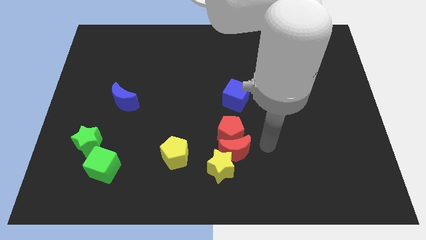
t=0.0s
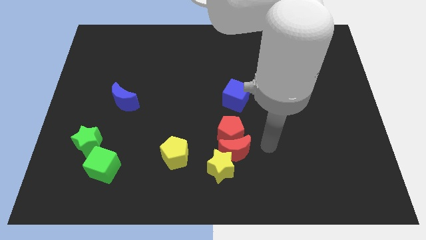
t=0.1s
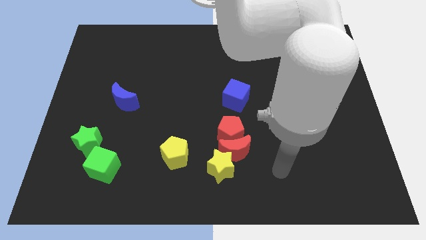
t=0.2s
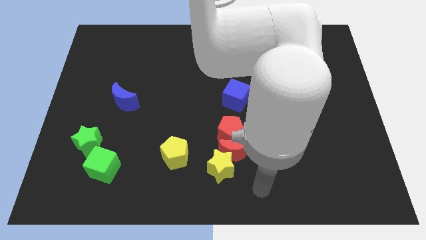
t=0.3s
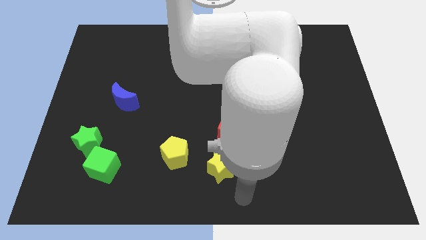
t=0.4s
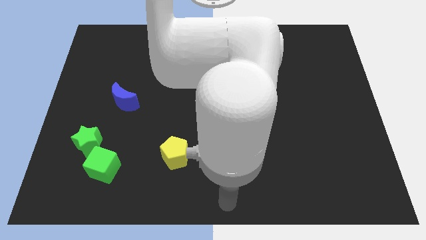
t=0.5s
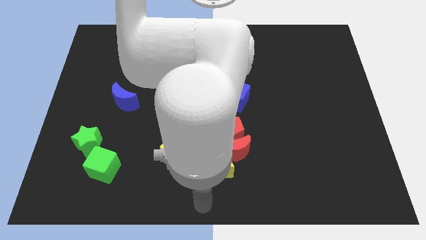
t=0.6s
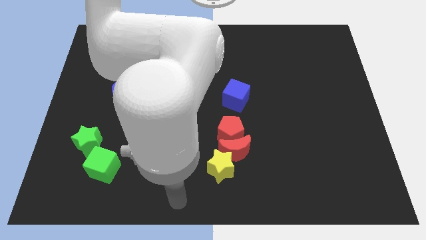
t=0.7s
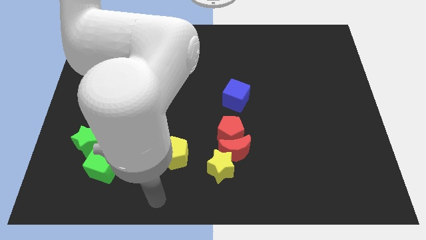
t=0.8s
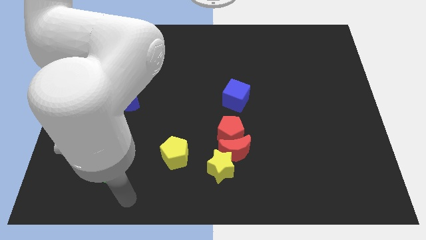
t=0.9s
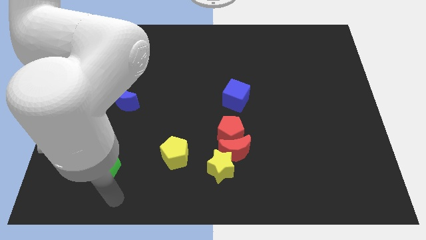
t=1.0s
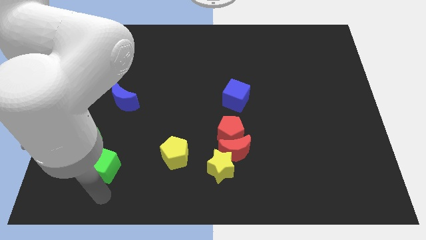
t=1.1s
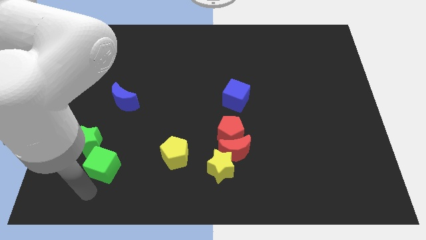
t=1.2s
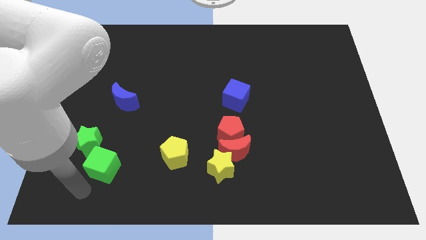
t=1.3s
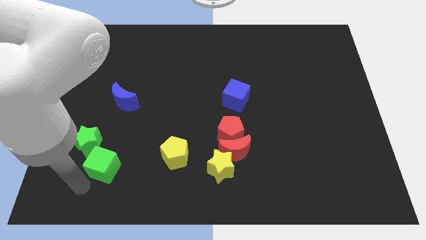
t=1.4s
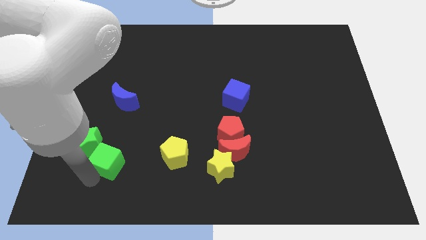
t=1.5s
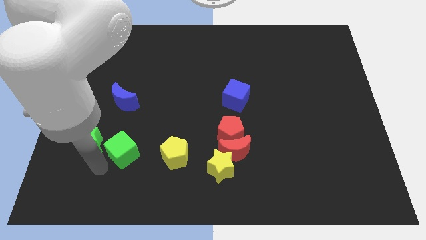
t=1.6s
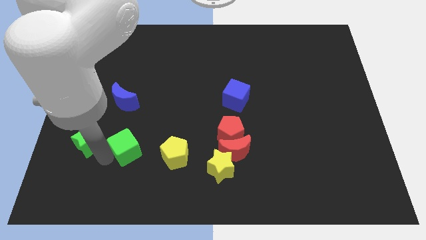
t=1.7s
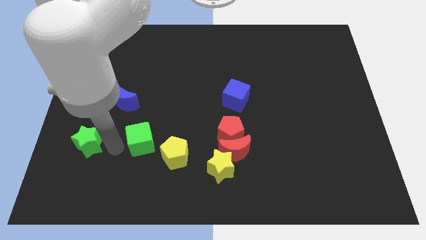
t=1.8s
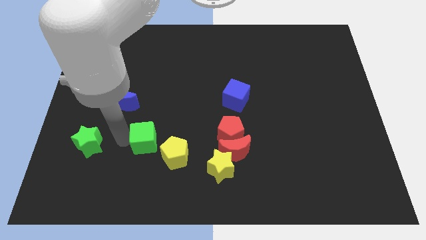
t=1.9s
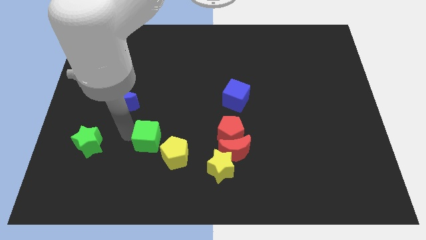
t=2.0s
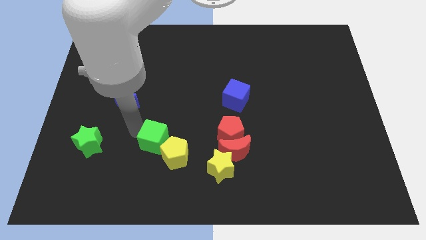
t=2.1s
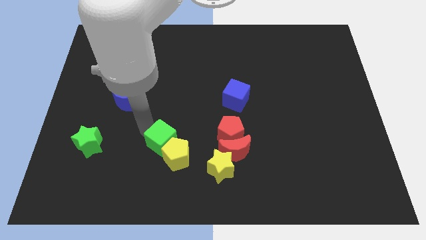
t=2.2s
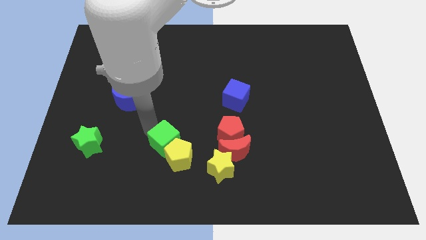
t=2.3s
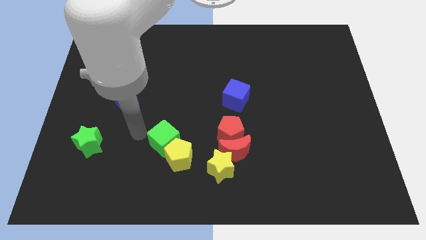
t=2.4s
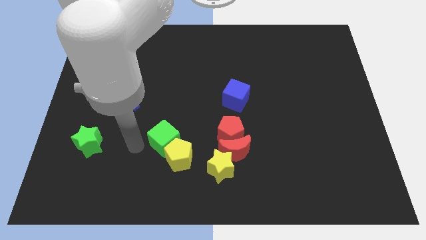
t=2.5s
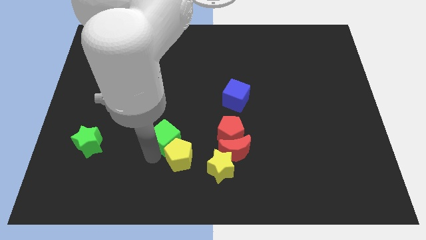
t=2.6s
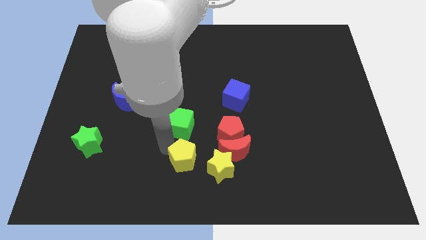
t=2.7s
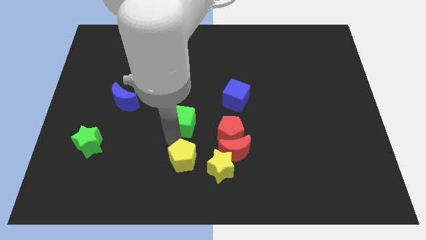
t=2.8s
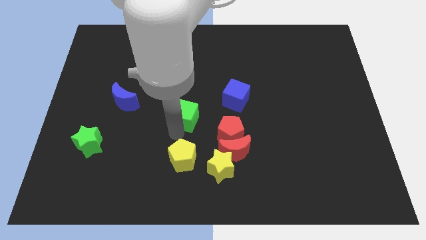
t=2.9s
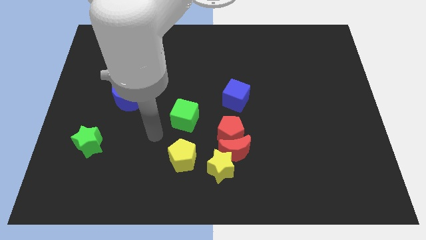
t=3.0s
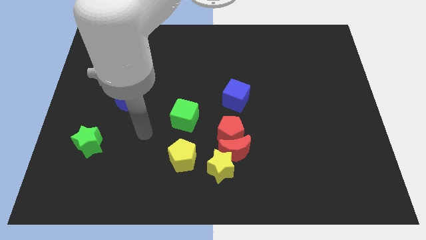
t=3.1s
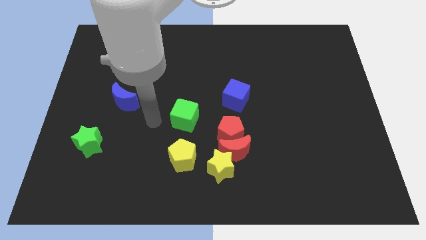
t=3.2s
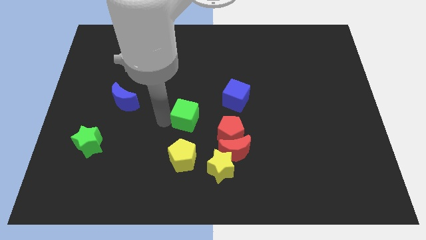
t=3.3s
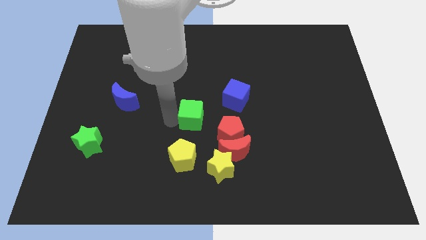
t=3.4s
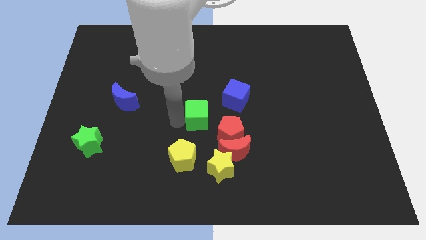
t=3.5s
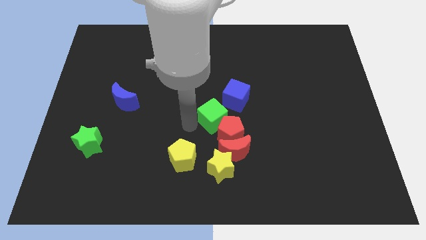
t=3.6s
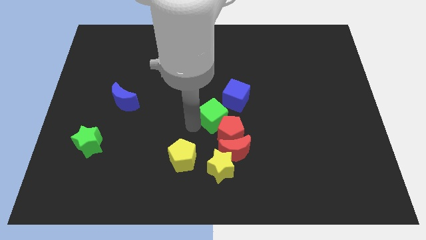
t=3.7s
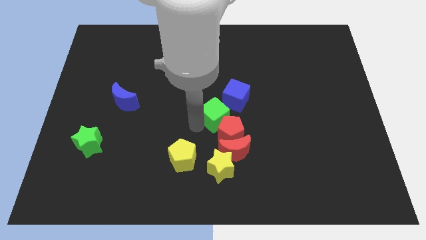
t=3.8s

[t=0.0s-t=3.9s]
move the green cube close to the red pentagon

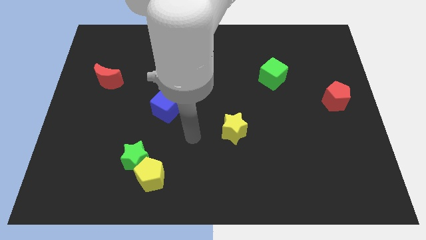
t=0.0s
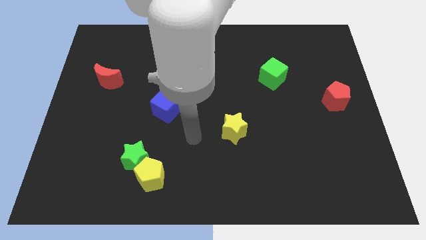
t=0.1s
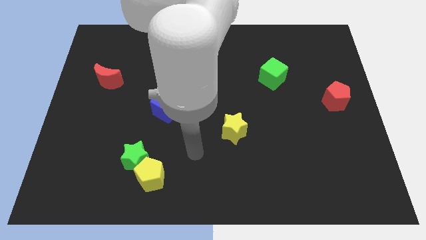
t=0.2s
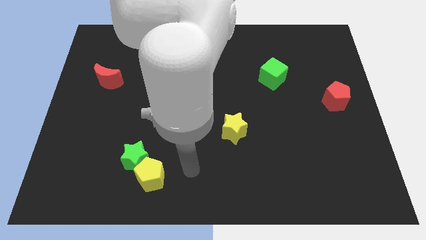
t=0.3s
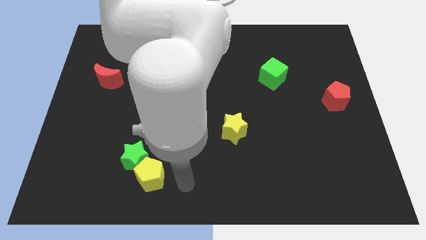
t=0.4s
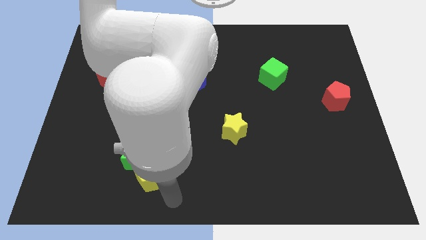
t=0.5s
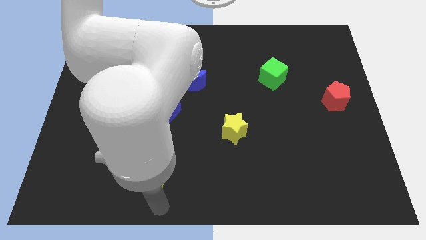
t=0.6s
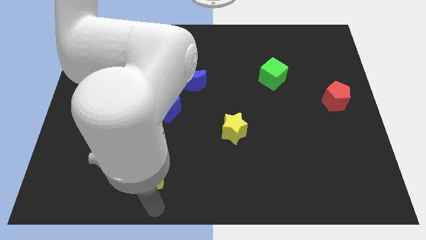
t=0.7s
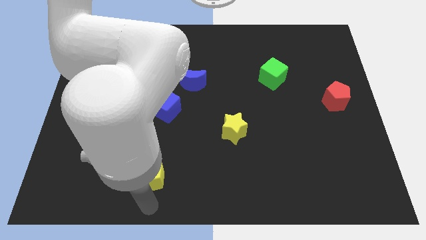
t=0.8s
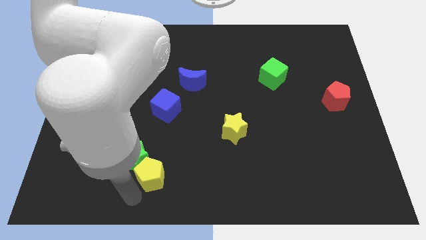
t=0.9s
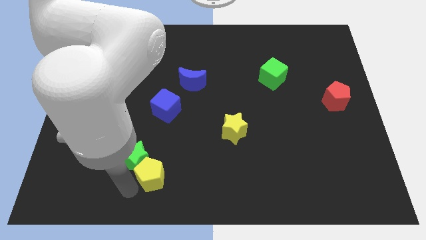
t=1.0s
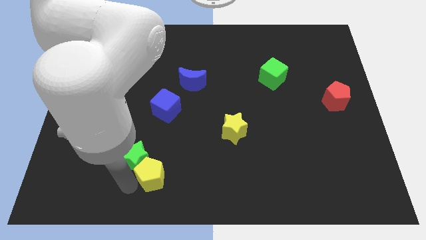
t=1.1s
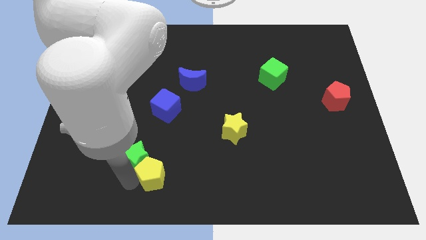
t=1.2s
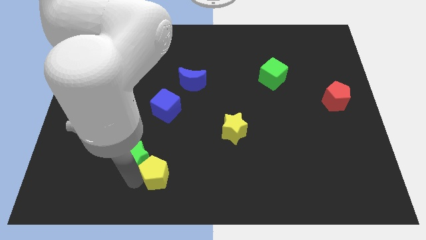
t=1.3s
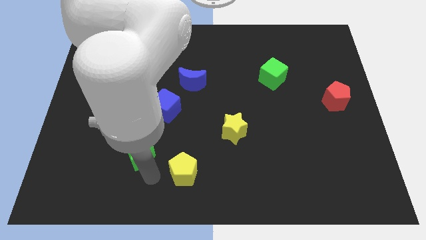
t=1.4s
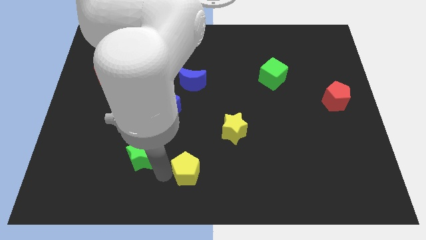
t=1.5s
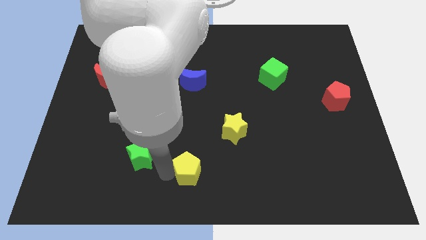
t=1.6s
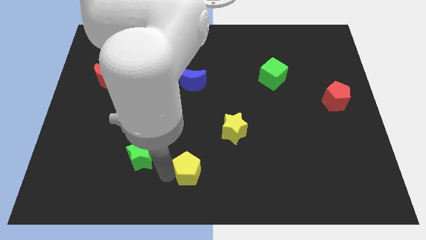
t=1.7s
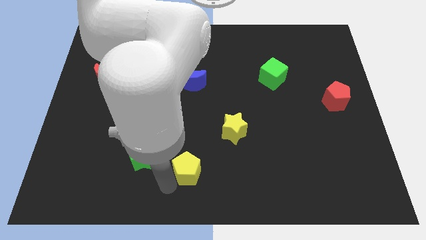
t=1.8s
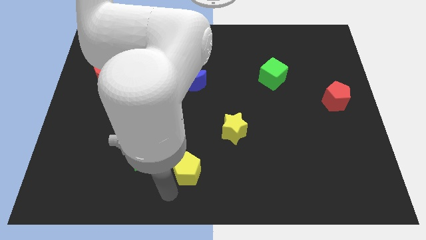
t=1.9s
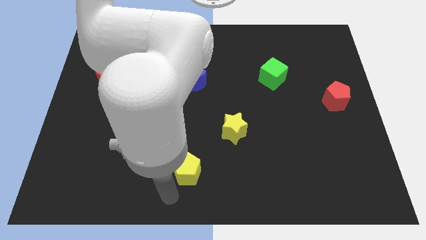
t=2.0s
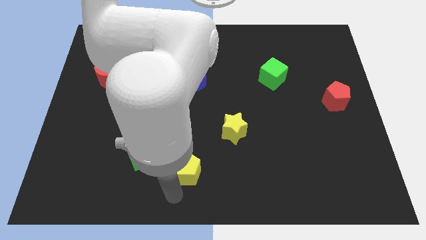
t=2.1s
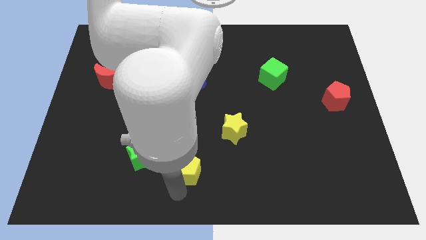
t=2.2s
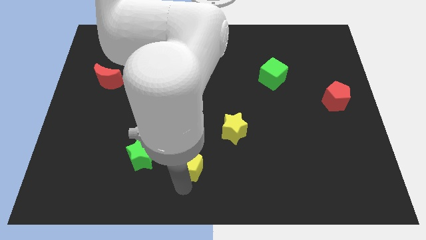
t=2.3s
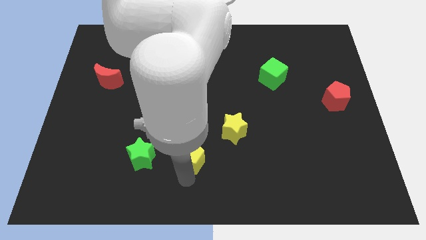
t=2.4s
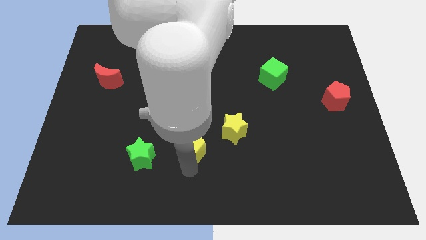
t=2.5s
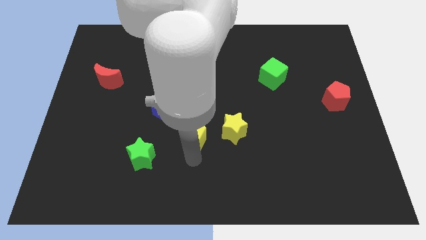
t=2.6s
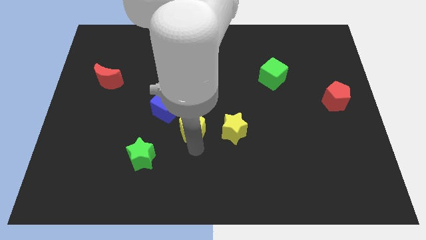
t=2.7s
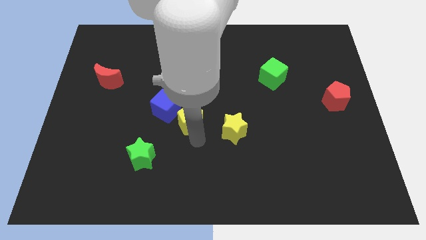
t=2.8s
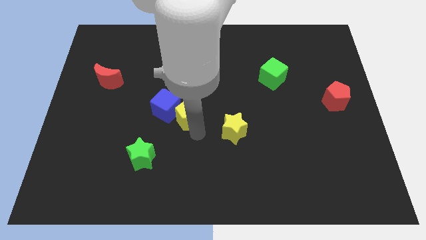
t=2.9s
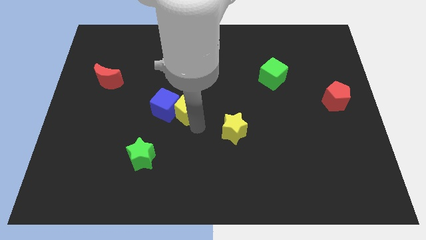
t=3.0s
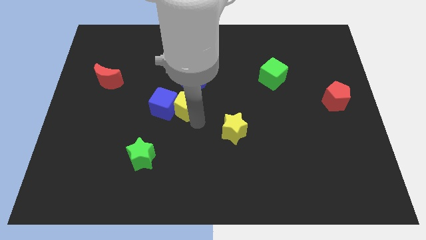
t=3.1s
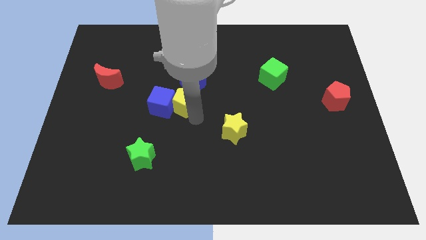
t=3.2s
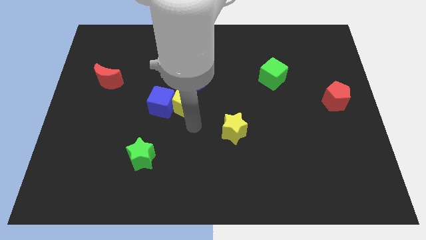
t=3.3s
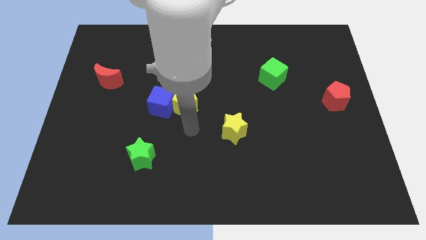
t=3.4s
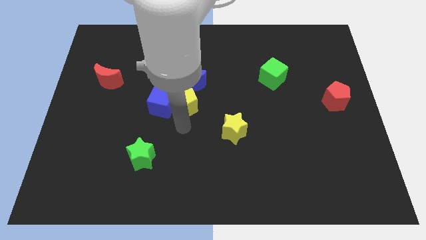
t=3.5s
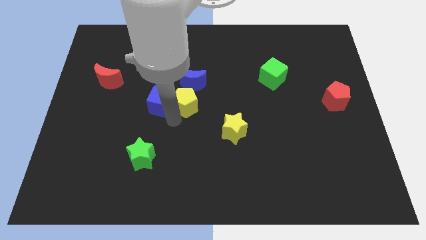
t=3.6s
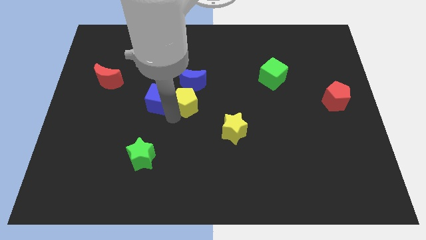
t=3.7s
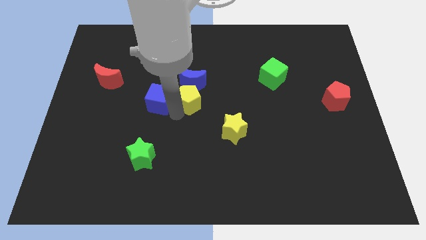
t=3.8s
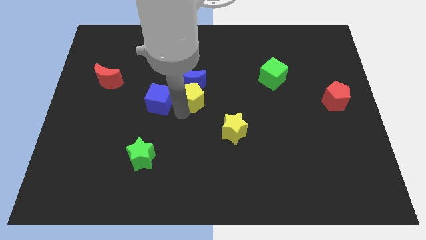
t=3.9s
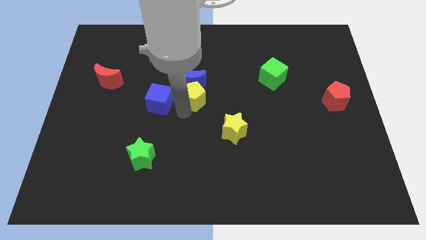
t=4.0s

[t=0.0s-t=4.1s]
put the yellow pentagon next to the blue moon

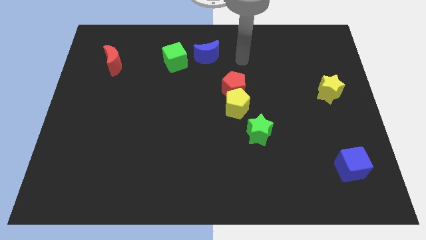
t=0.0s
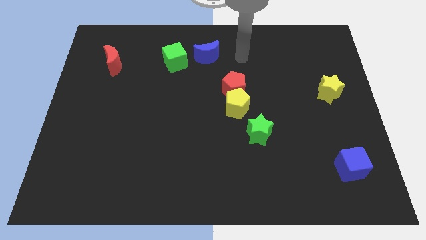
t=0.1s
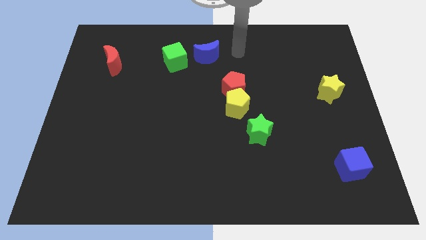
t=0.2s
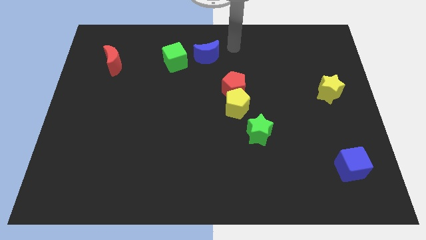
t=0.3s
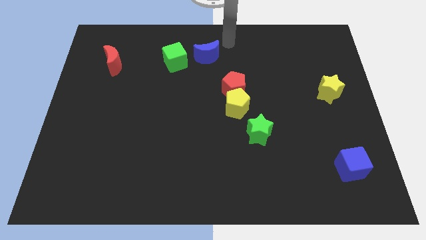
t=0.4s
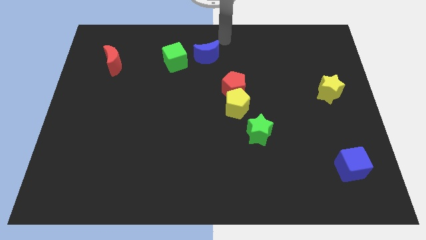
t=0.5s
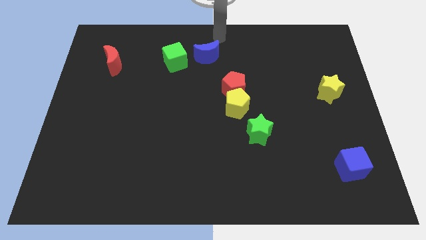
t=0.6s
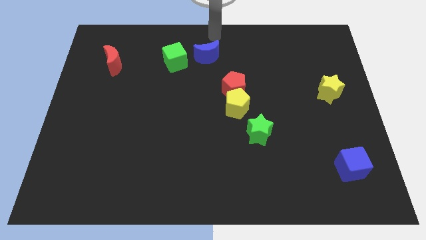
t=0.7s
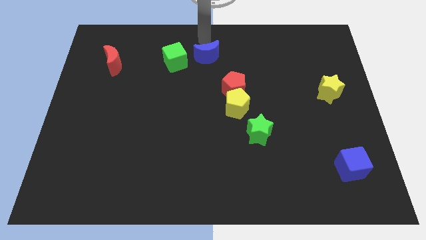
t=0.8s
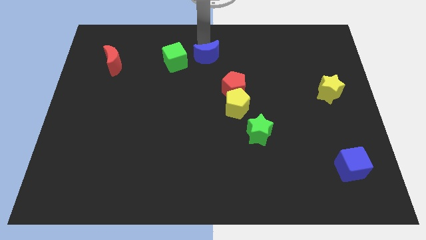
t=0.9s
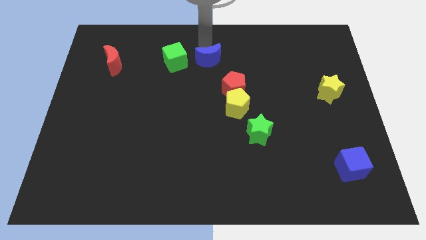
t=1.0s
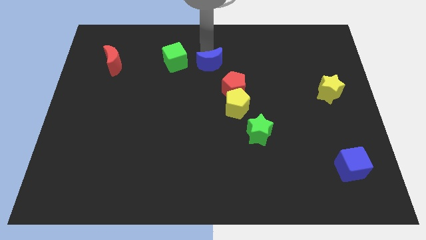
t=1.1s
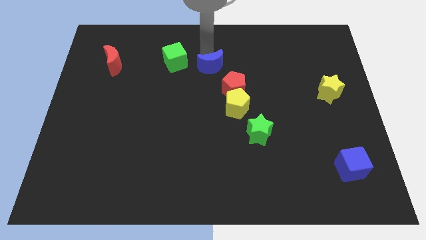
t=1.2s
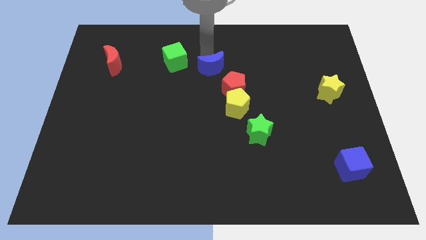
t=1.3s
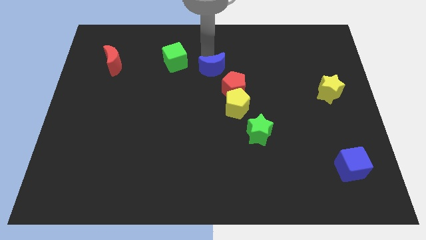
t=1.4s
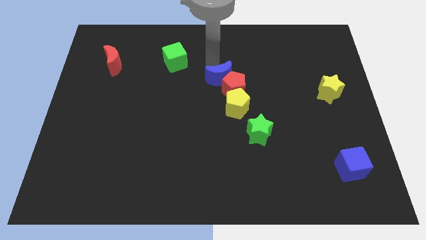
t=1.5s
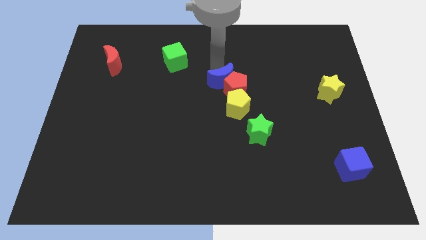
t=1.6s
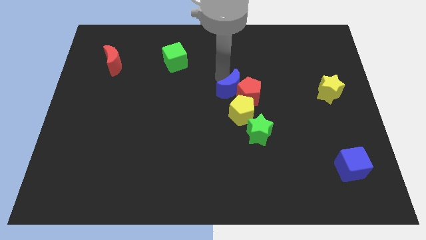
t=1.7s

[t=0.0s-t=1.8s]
push the blue moon next to the red pentagon
